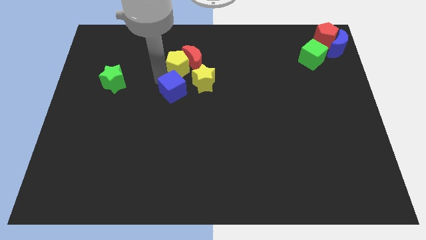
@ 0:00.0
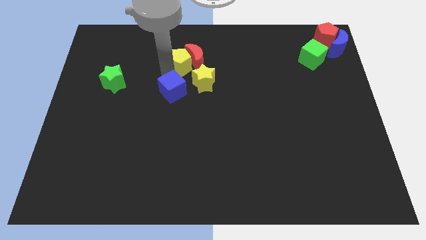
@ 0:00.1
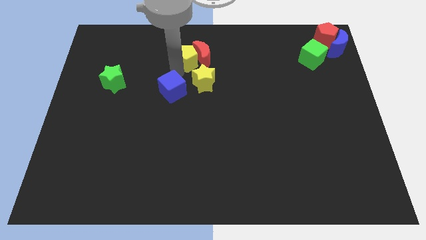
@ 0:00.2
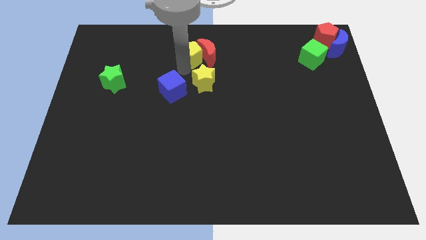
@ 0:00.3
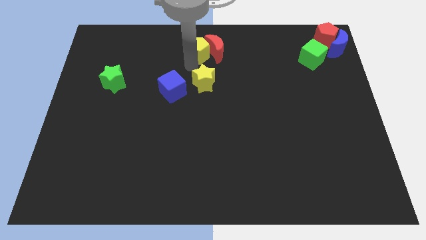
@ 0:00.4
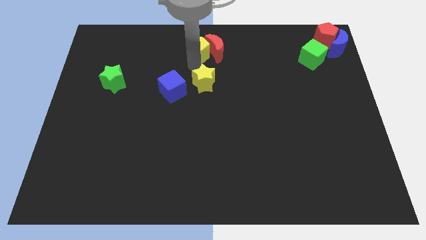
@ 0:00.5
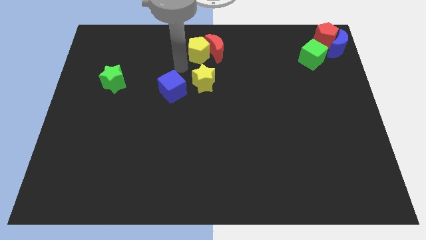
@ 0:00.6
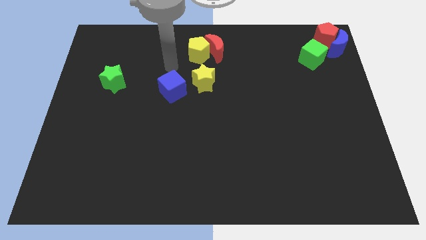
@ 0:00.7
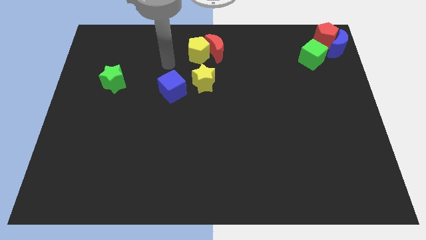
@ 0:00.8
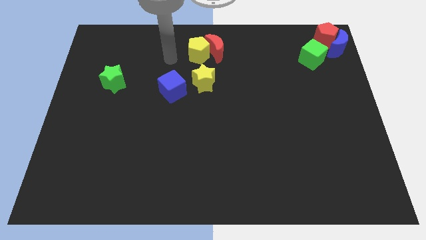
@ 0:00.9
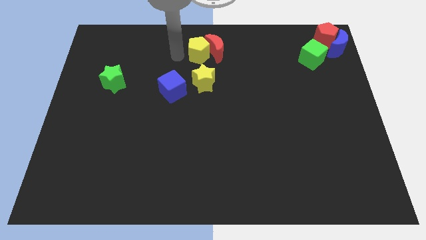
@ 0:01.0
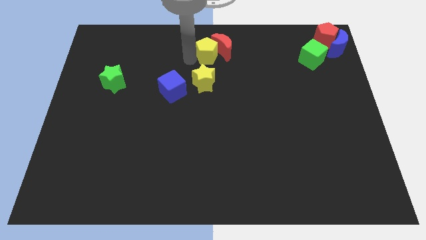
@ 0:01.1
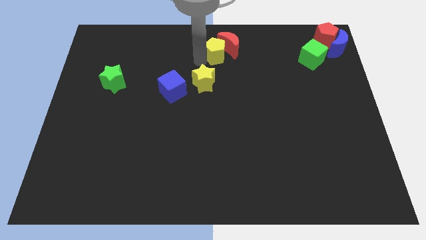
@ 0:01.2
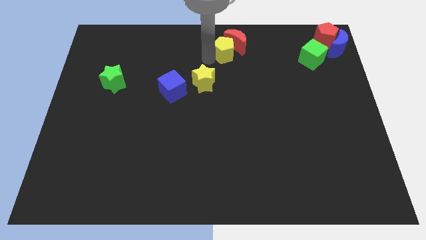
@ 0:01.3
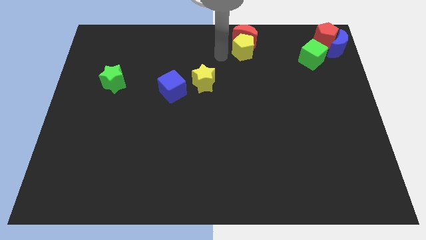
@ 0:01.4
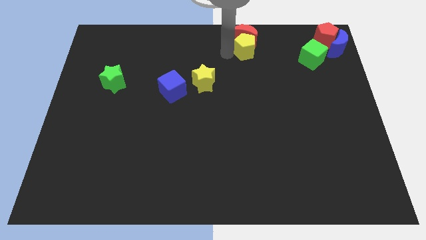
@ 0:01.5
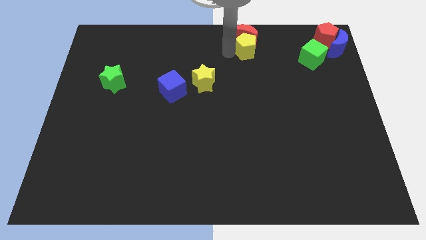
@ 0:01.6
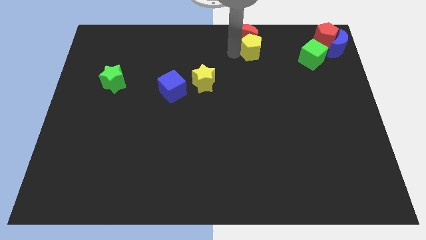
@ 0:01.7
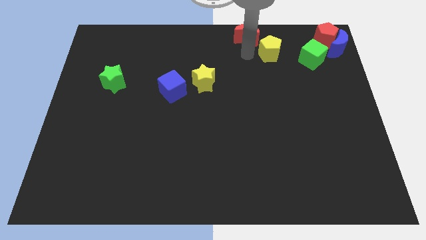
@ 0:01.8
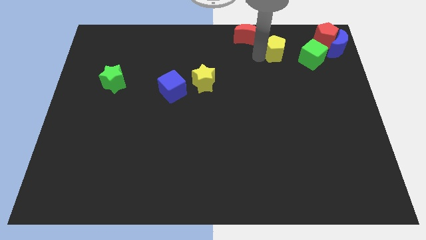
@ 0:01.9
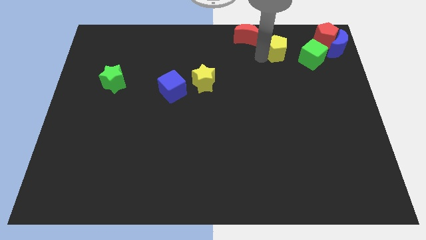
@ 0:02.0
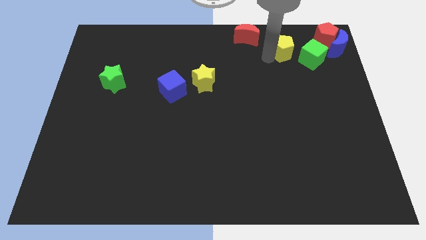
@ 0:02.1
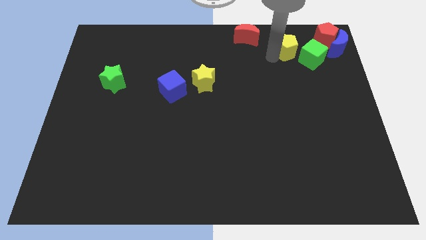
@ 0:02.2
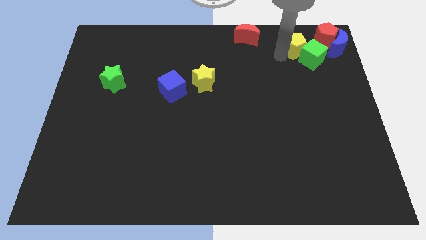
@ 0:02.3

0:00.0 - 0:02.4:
separate the yellow pentagon from the red crescent

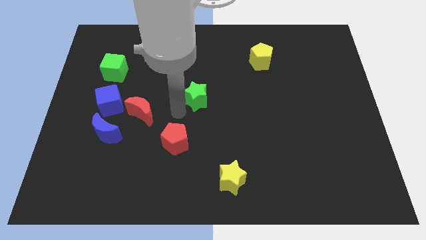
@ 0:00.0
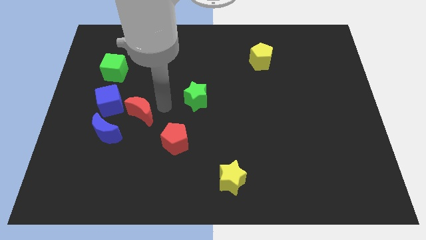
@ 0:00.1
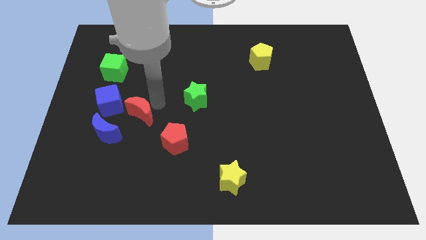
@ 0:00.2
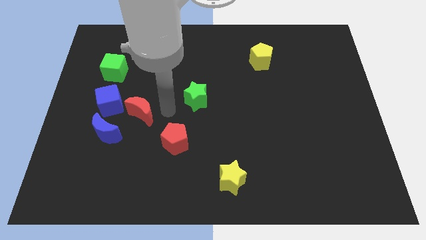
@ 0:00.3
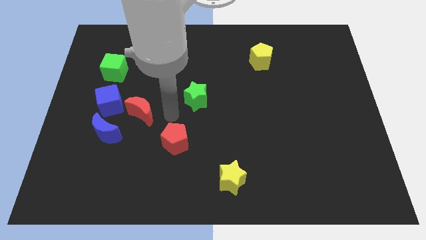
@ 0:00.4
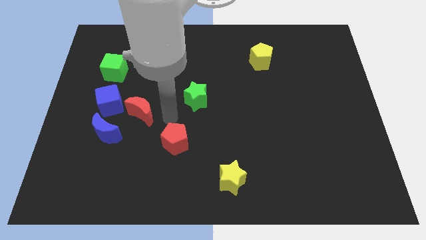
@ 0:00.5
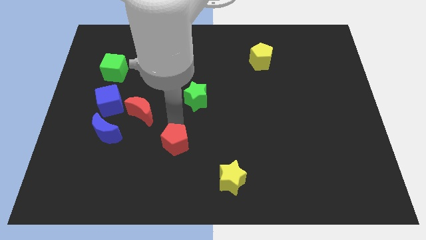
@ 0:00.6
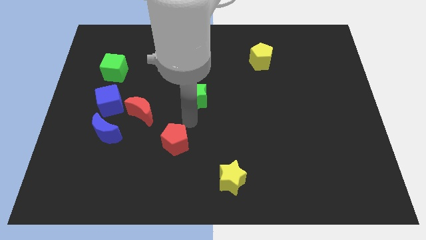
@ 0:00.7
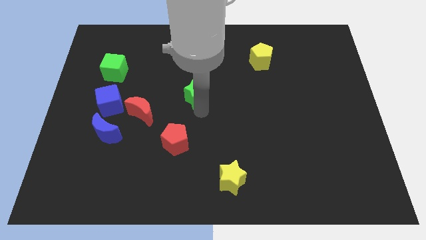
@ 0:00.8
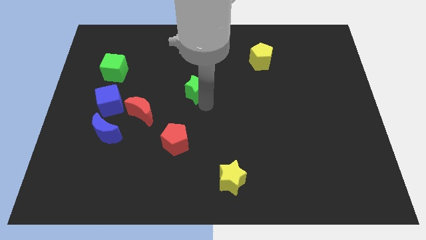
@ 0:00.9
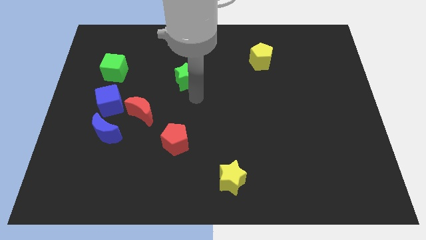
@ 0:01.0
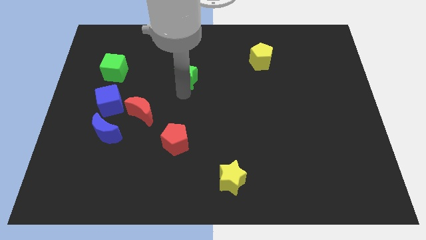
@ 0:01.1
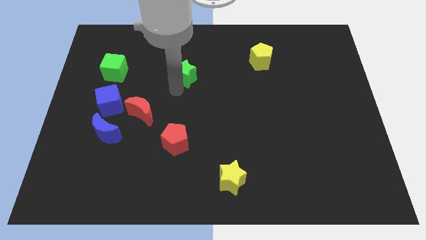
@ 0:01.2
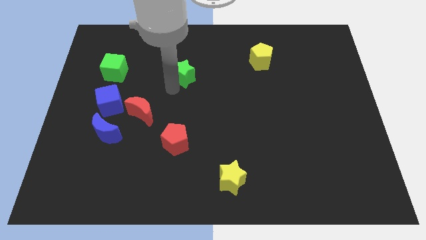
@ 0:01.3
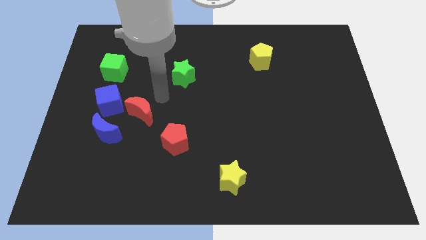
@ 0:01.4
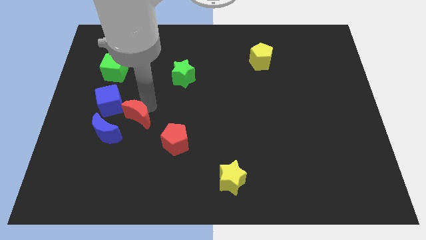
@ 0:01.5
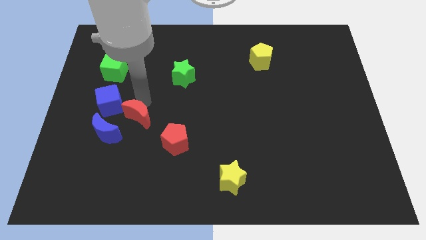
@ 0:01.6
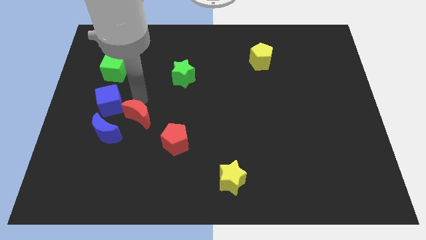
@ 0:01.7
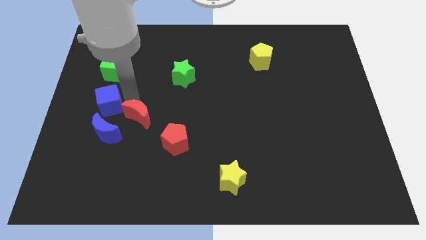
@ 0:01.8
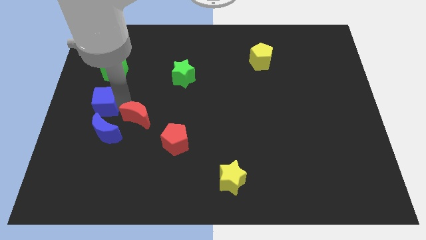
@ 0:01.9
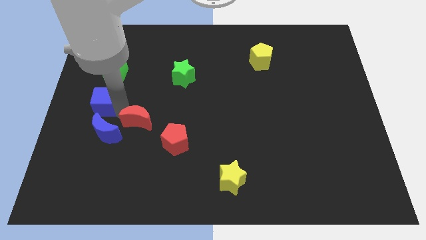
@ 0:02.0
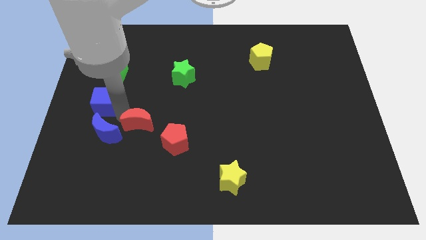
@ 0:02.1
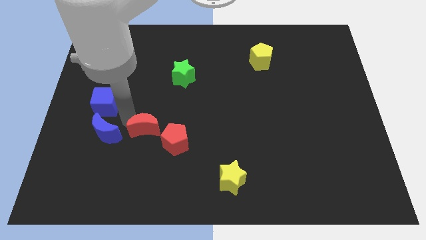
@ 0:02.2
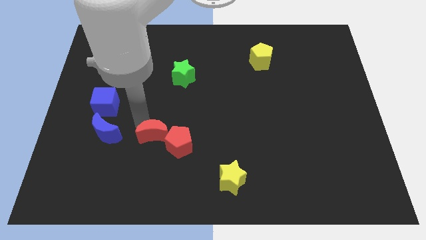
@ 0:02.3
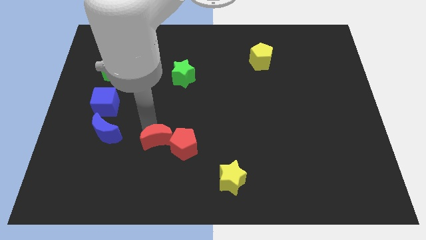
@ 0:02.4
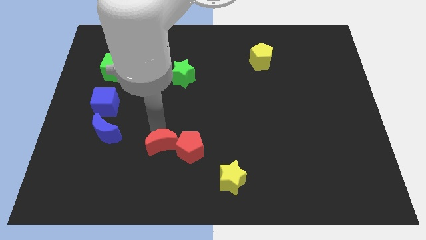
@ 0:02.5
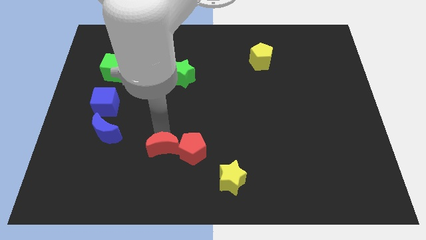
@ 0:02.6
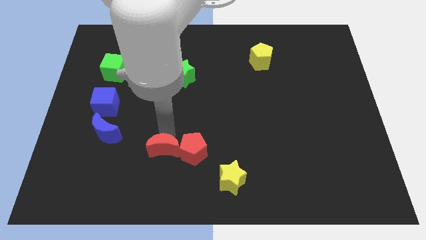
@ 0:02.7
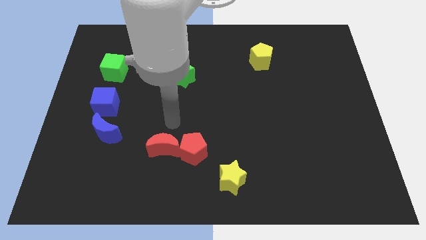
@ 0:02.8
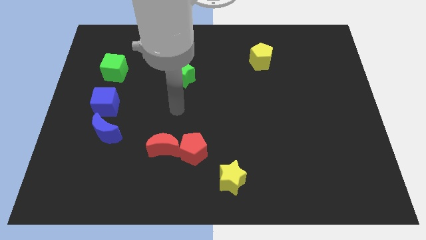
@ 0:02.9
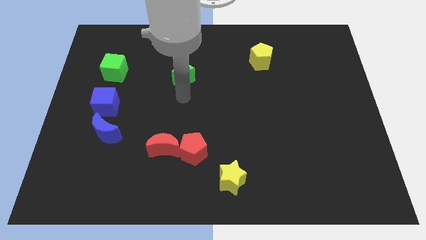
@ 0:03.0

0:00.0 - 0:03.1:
push the red moon into the red pentagon

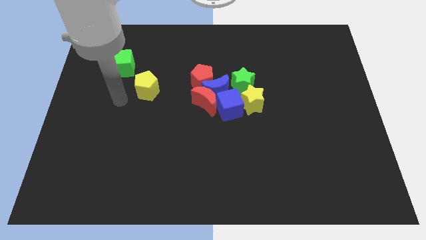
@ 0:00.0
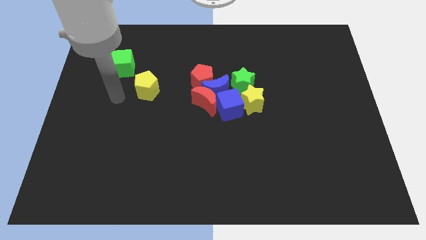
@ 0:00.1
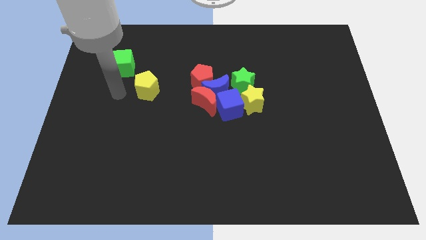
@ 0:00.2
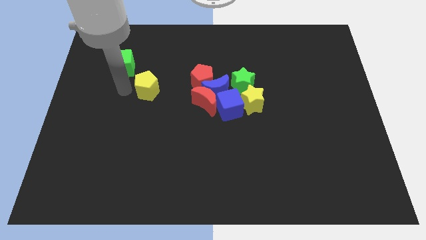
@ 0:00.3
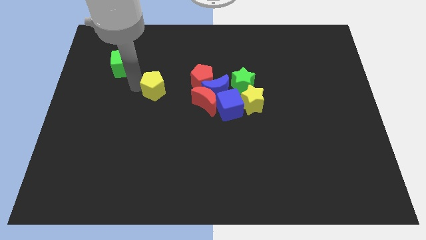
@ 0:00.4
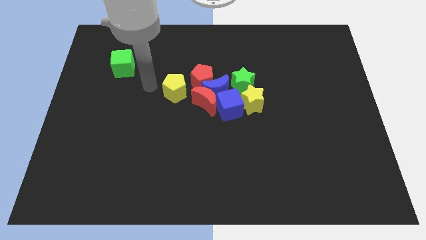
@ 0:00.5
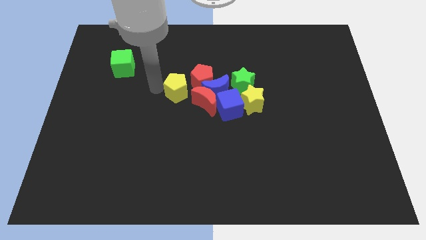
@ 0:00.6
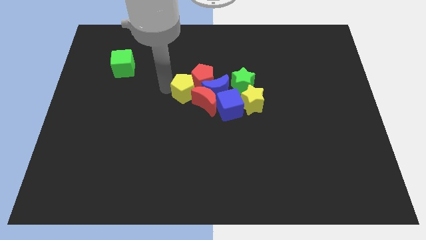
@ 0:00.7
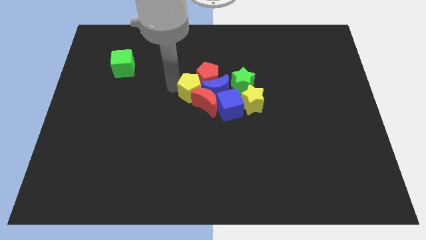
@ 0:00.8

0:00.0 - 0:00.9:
push the yellow pentagon to the group of blocks

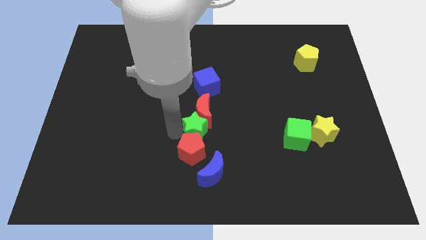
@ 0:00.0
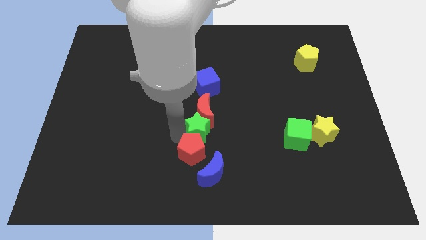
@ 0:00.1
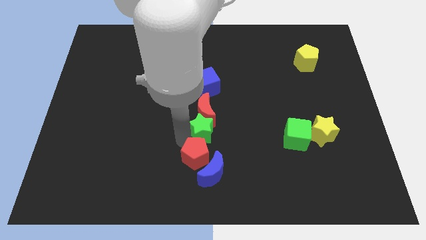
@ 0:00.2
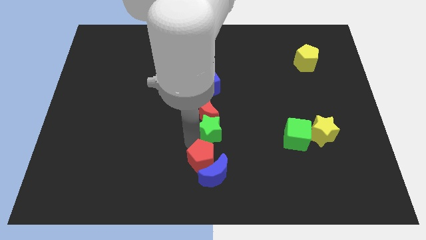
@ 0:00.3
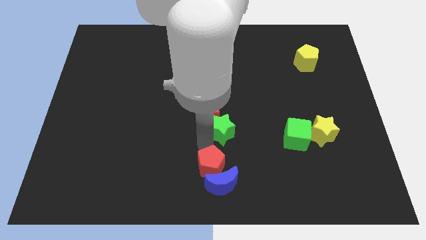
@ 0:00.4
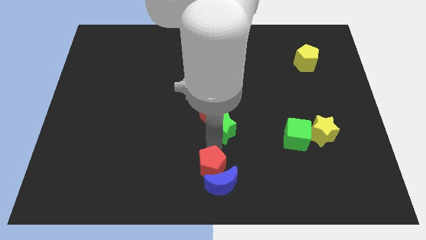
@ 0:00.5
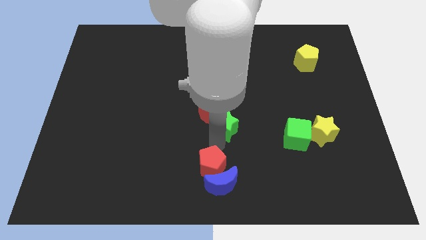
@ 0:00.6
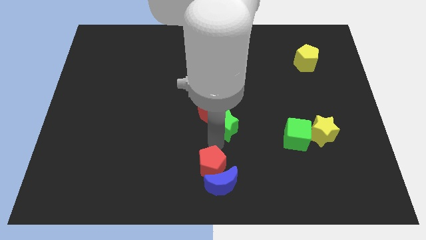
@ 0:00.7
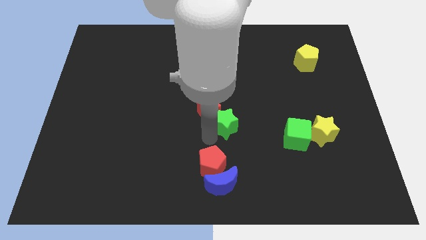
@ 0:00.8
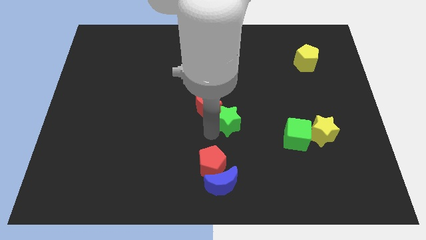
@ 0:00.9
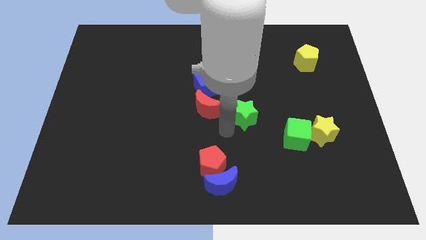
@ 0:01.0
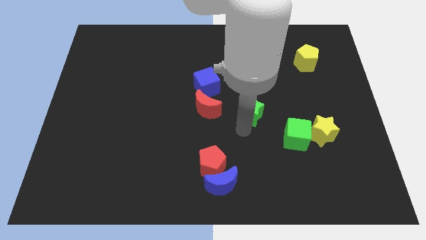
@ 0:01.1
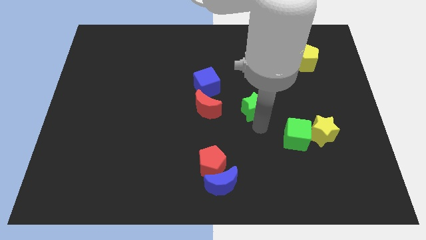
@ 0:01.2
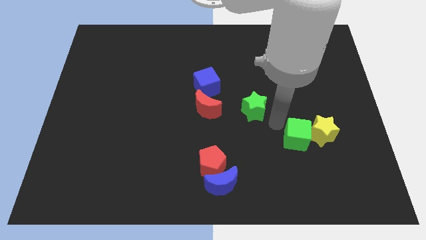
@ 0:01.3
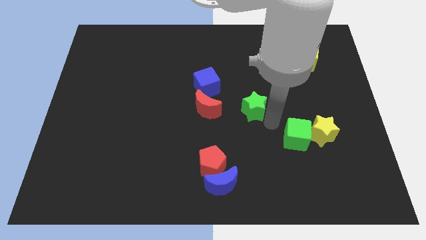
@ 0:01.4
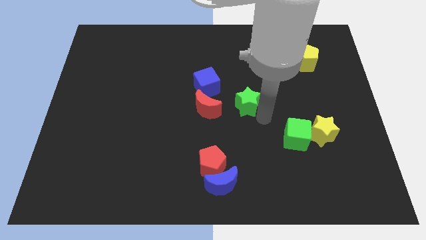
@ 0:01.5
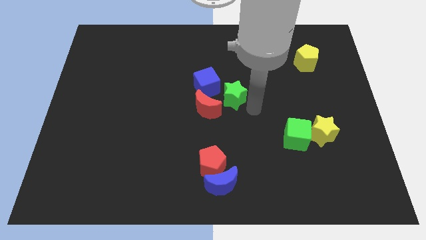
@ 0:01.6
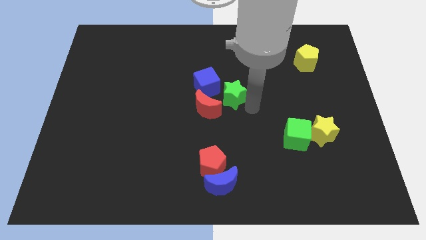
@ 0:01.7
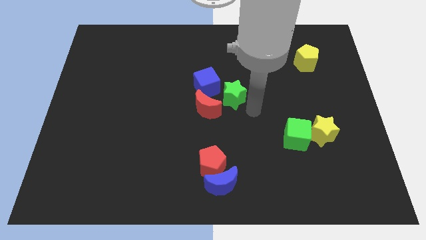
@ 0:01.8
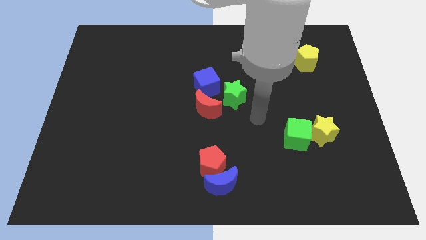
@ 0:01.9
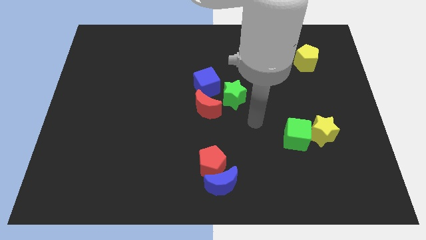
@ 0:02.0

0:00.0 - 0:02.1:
slide the green star diagonally to green cube

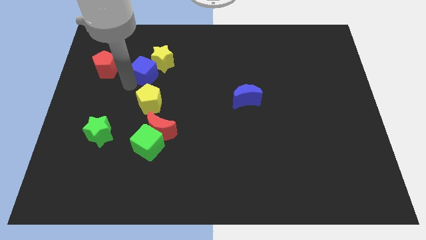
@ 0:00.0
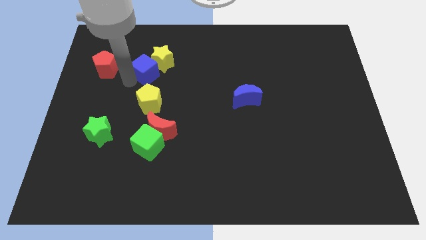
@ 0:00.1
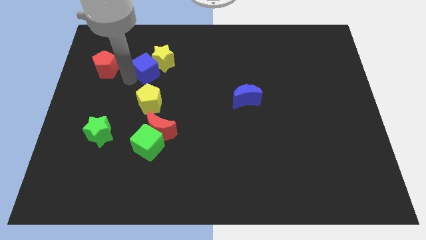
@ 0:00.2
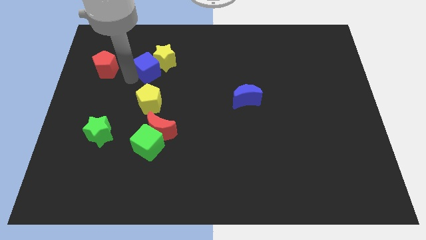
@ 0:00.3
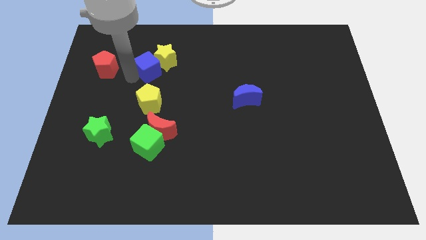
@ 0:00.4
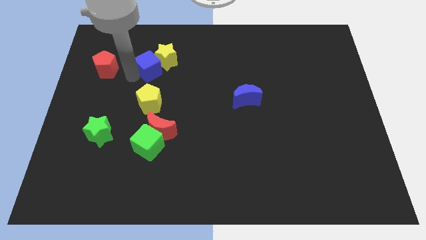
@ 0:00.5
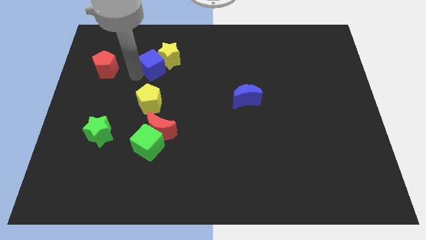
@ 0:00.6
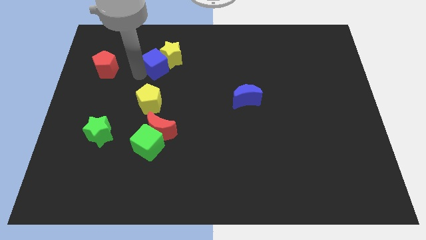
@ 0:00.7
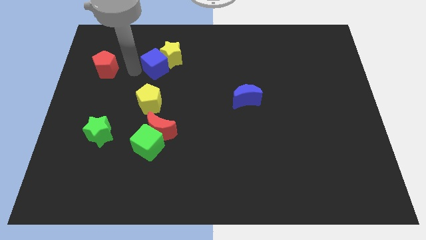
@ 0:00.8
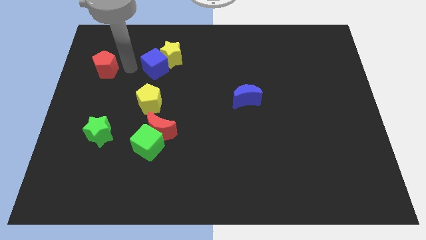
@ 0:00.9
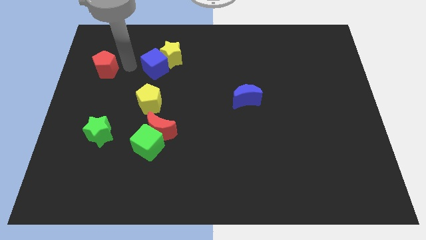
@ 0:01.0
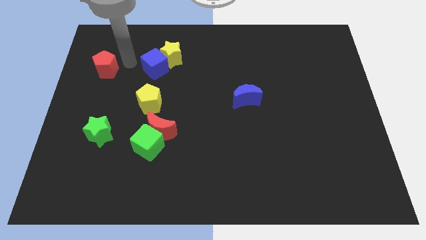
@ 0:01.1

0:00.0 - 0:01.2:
place the arm between the red pentagon and blue cube
